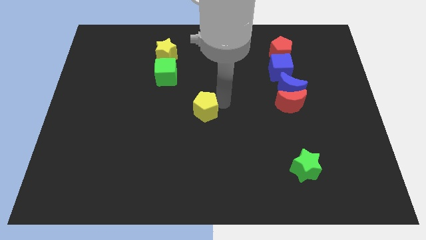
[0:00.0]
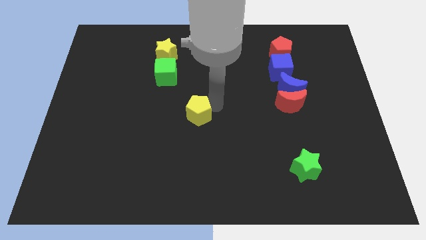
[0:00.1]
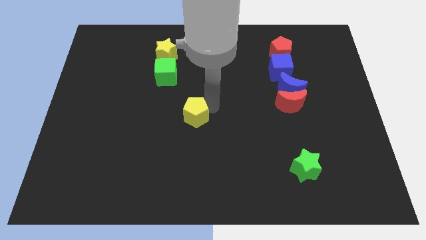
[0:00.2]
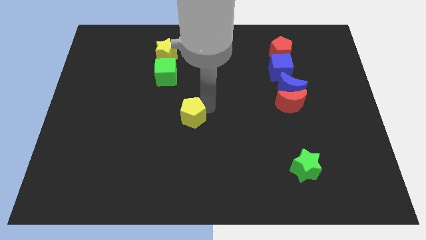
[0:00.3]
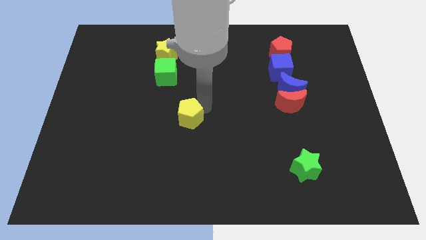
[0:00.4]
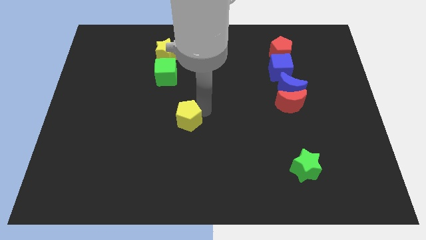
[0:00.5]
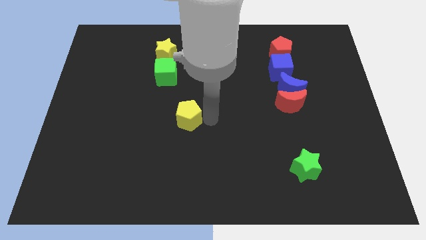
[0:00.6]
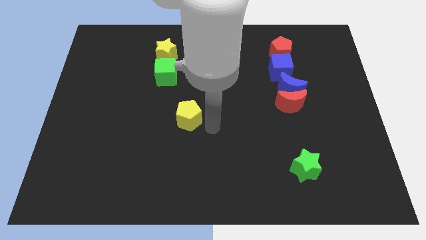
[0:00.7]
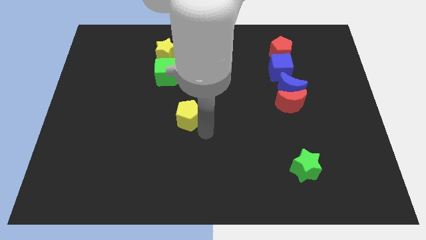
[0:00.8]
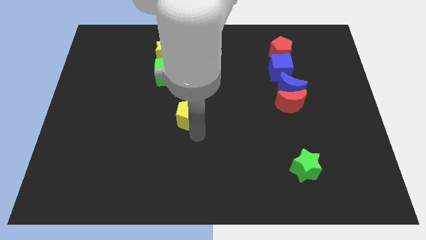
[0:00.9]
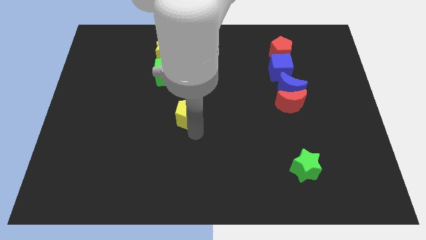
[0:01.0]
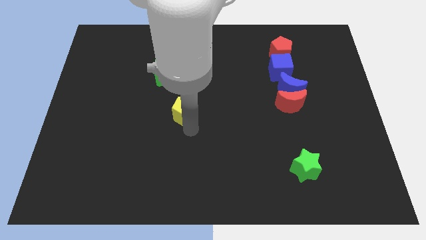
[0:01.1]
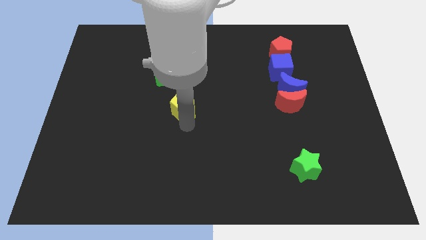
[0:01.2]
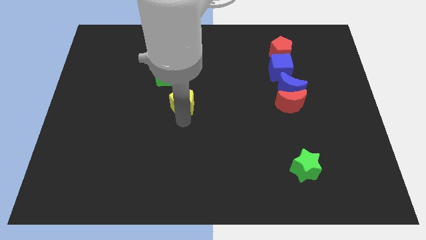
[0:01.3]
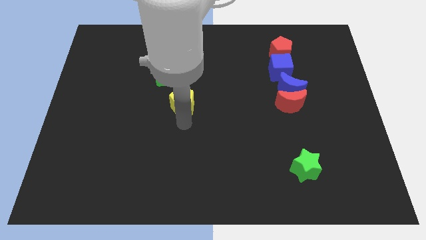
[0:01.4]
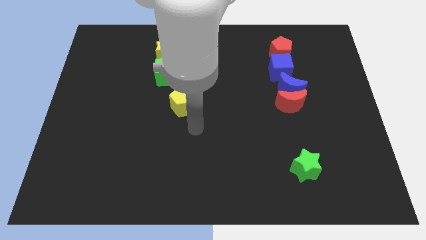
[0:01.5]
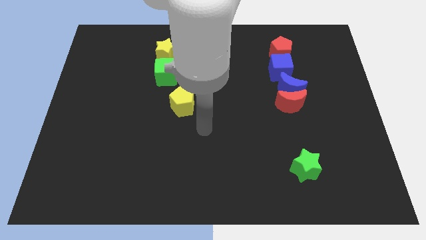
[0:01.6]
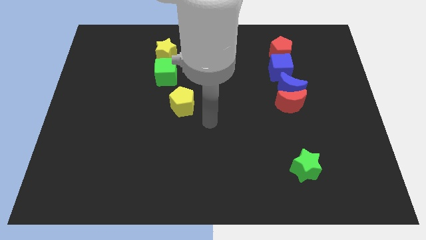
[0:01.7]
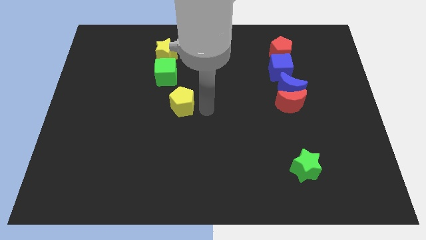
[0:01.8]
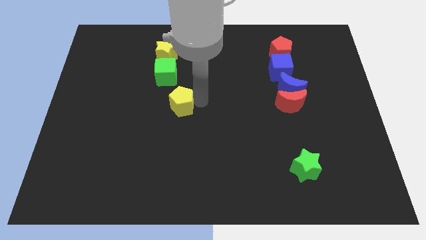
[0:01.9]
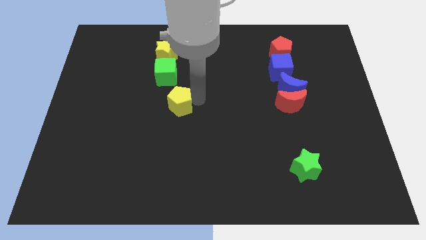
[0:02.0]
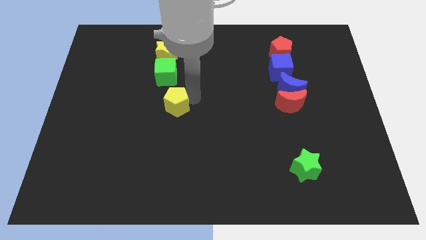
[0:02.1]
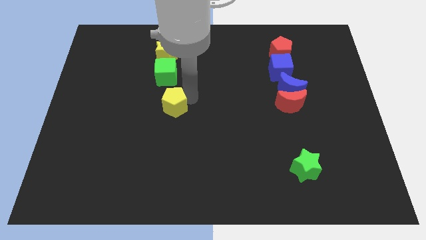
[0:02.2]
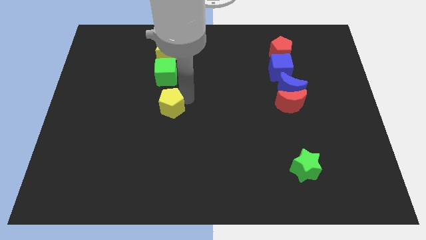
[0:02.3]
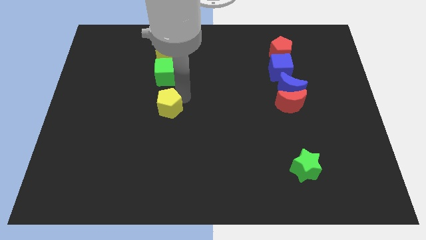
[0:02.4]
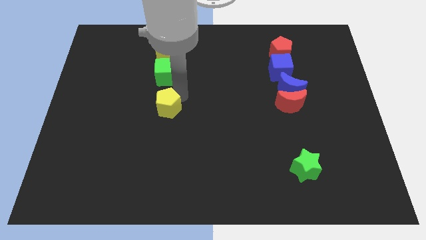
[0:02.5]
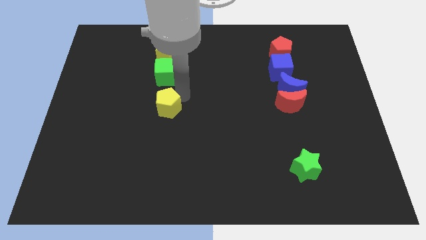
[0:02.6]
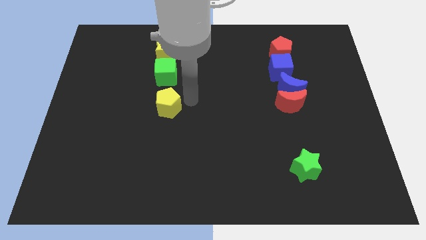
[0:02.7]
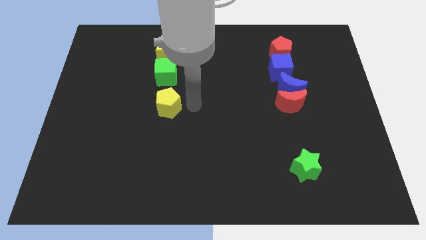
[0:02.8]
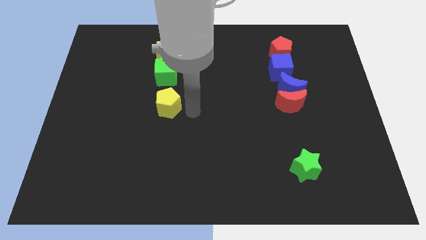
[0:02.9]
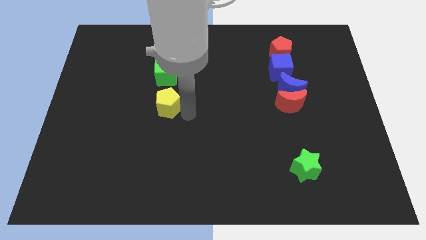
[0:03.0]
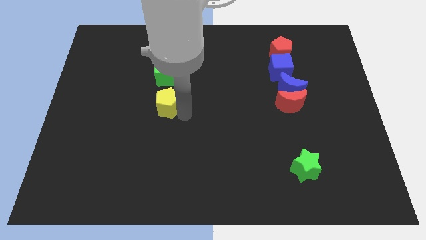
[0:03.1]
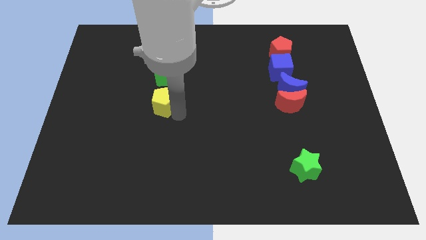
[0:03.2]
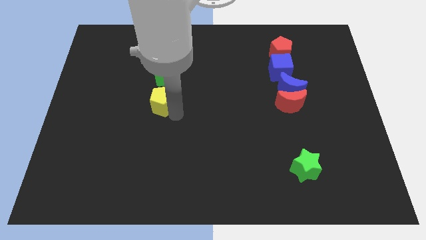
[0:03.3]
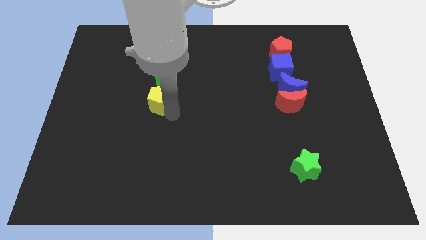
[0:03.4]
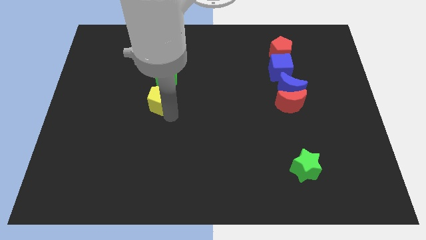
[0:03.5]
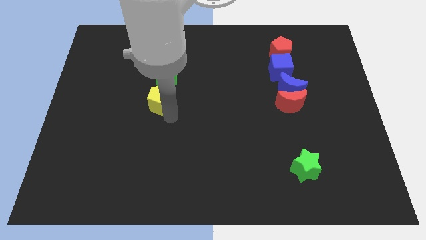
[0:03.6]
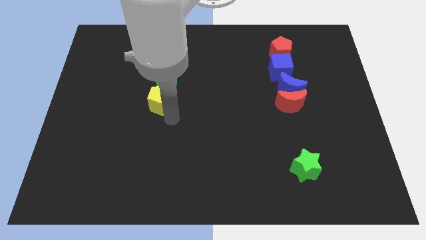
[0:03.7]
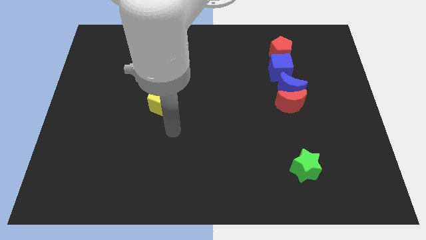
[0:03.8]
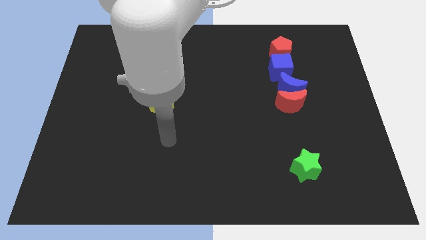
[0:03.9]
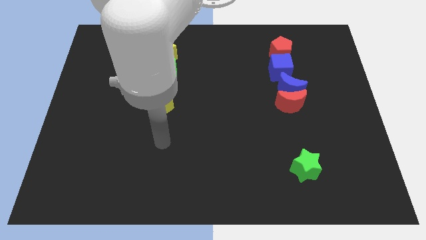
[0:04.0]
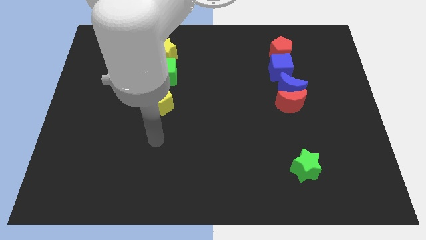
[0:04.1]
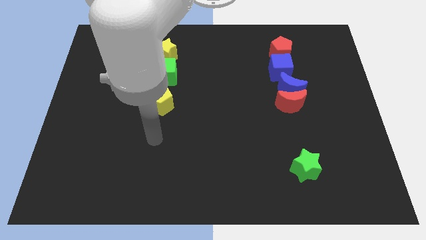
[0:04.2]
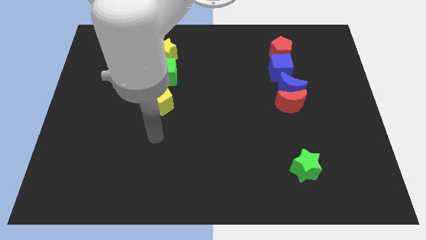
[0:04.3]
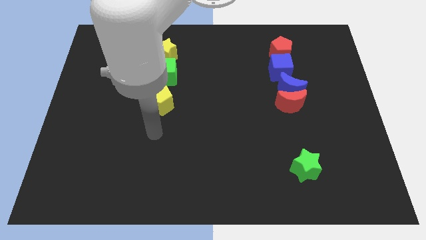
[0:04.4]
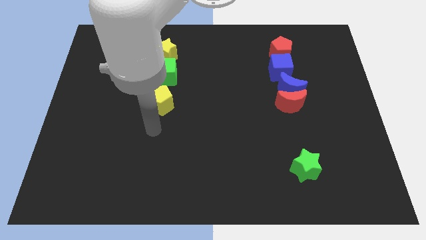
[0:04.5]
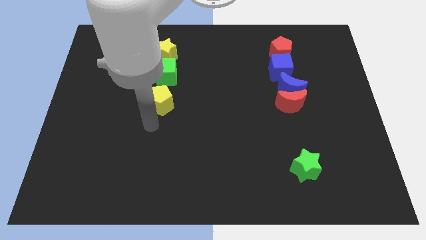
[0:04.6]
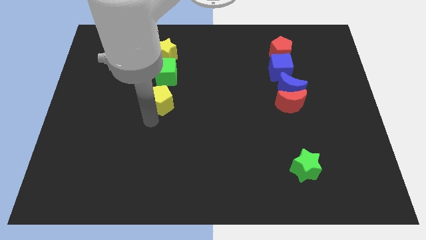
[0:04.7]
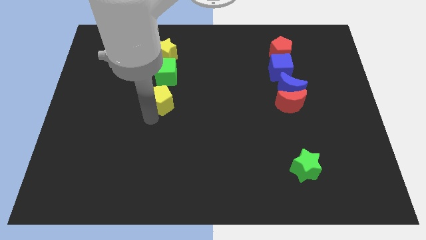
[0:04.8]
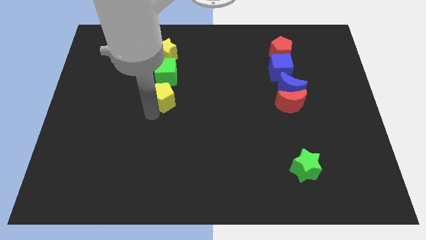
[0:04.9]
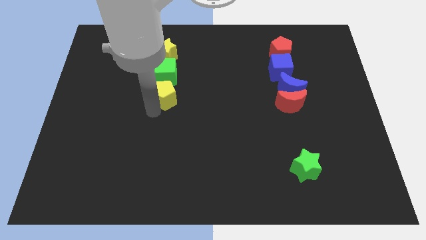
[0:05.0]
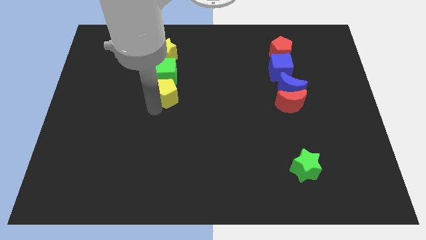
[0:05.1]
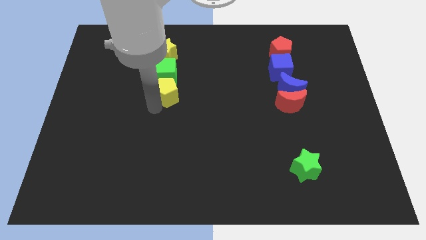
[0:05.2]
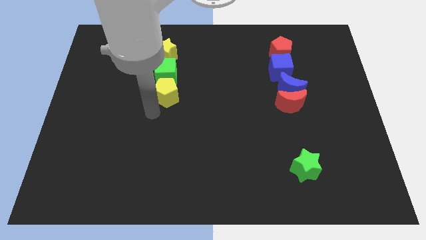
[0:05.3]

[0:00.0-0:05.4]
place the yellow pentagon vertically below the group of blocks

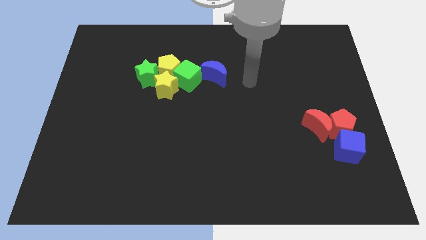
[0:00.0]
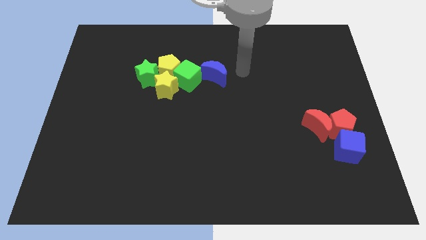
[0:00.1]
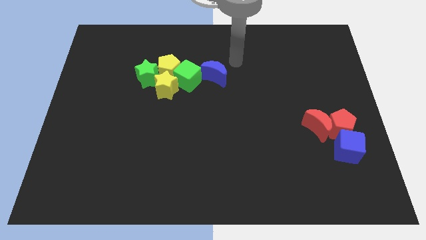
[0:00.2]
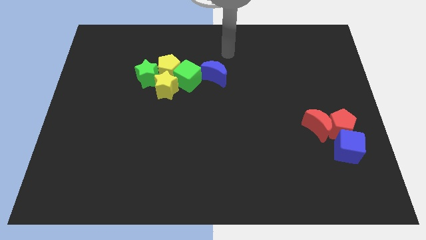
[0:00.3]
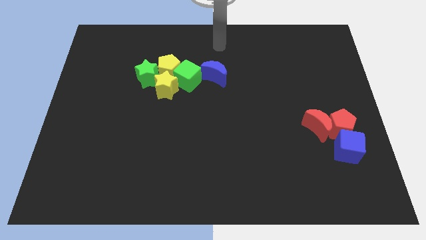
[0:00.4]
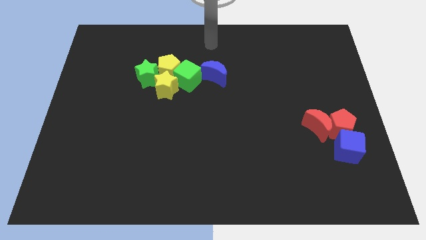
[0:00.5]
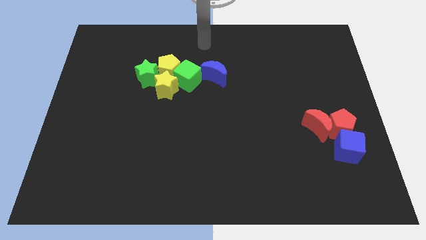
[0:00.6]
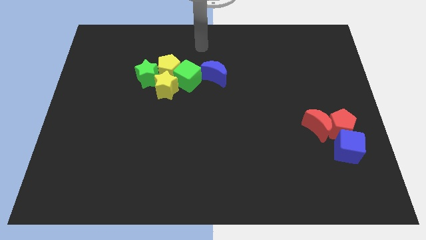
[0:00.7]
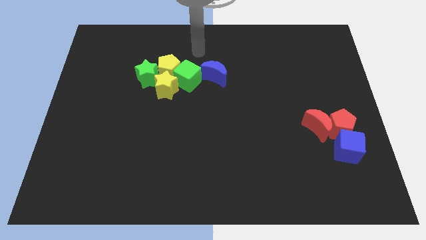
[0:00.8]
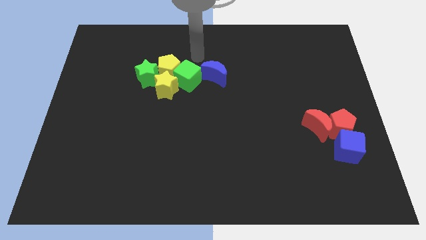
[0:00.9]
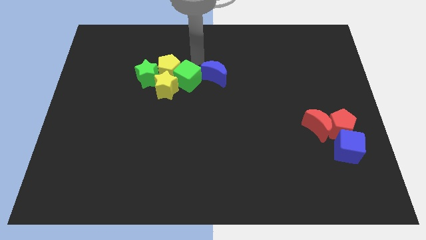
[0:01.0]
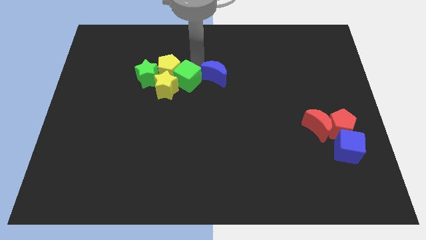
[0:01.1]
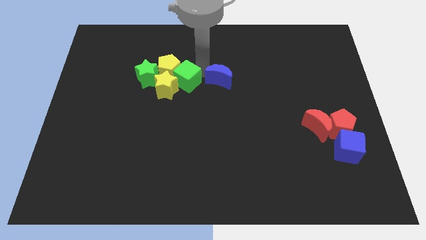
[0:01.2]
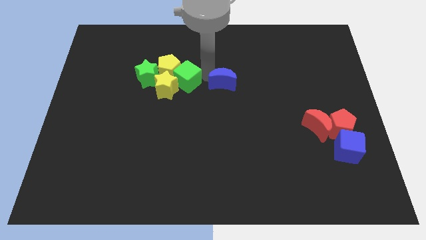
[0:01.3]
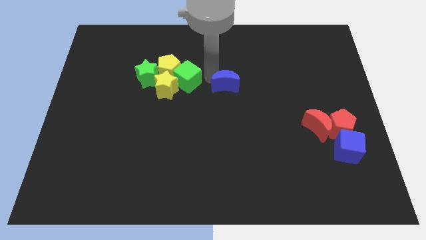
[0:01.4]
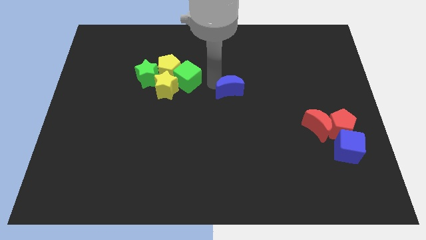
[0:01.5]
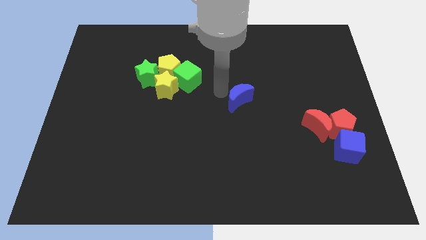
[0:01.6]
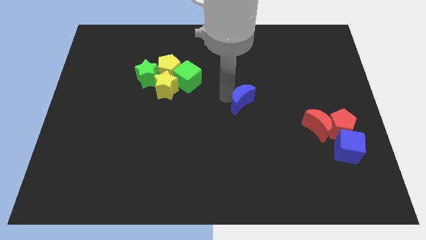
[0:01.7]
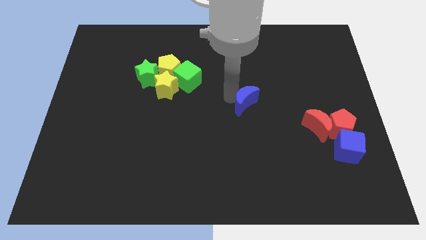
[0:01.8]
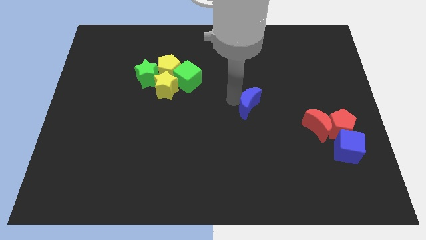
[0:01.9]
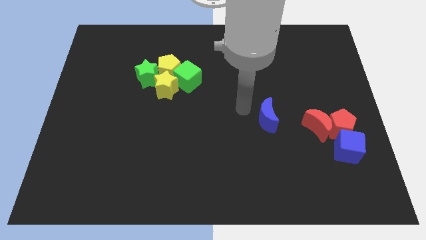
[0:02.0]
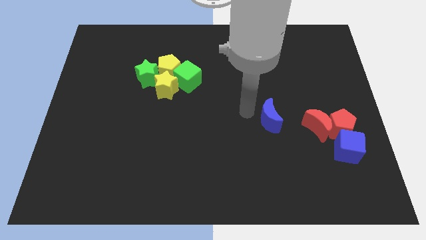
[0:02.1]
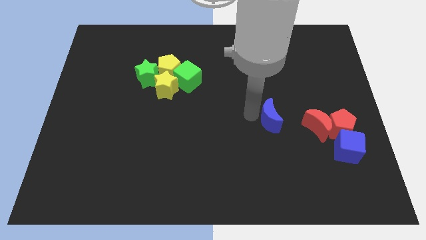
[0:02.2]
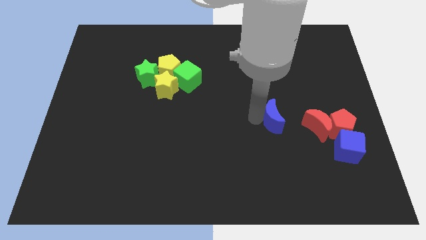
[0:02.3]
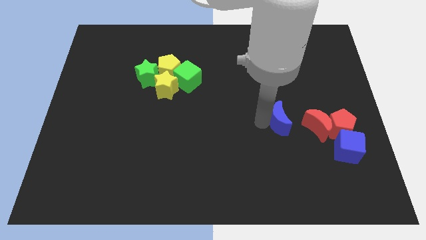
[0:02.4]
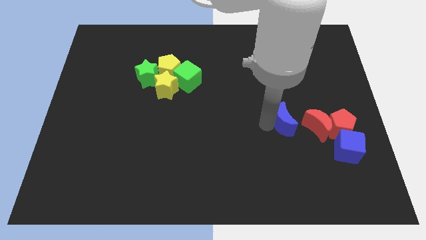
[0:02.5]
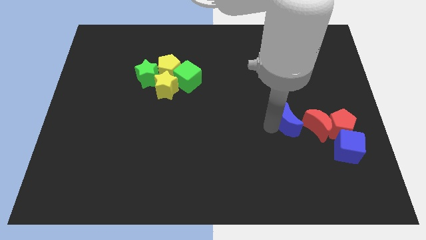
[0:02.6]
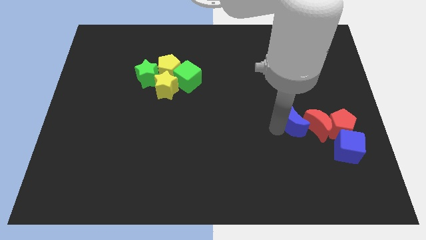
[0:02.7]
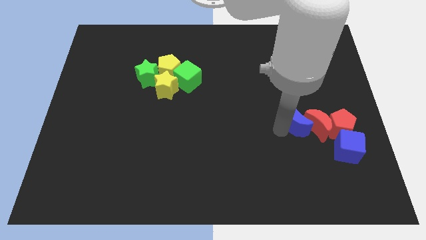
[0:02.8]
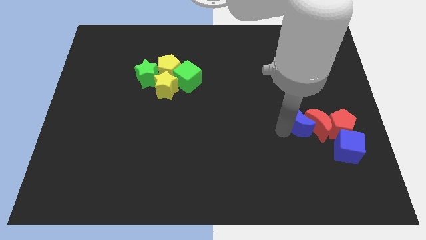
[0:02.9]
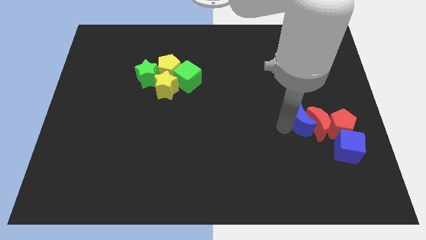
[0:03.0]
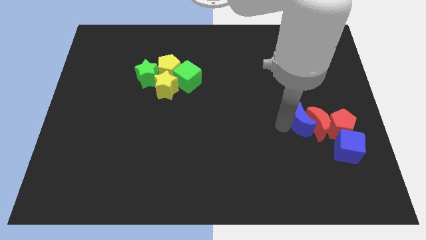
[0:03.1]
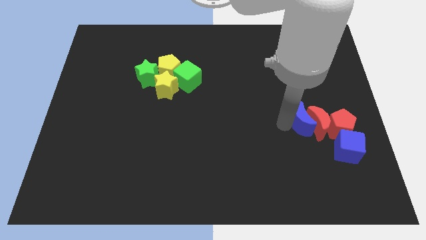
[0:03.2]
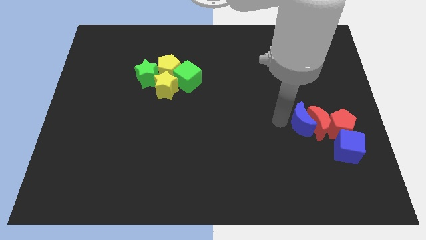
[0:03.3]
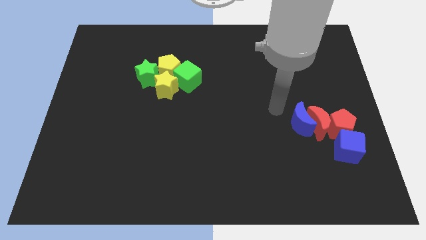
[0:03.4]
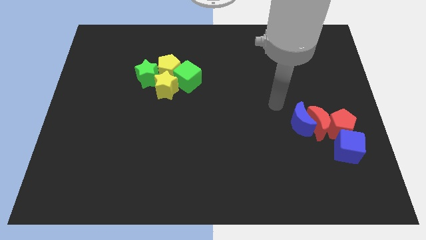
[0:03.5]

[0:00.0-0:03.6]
push the blue moon into the red moon
